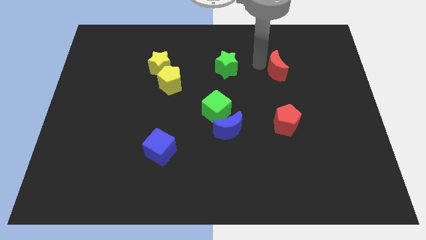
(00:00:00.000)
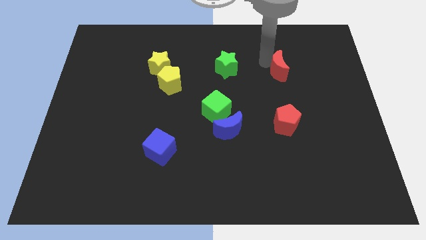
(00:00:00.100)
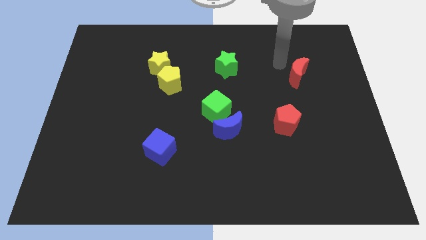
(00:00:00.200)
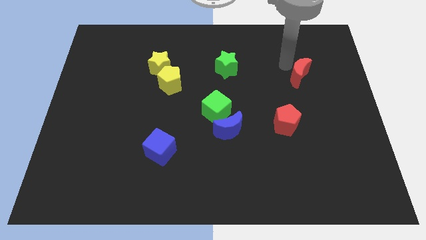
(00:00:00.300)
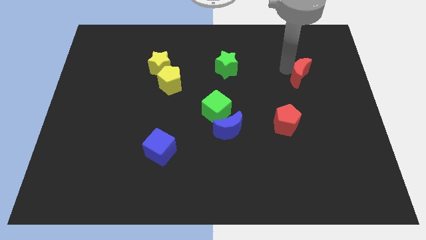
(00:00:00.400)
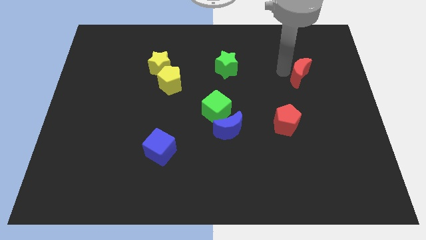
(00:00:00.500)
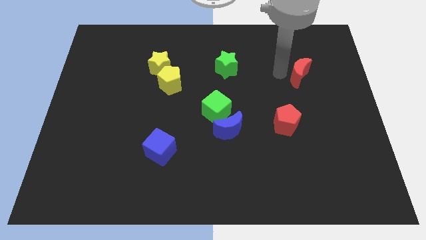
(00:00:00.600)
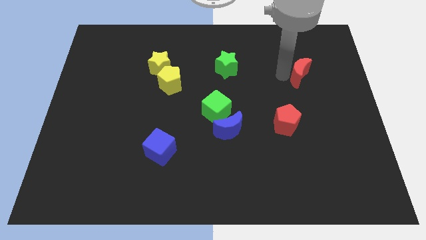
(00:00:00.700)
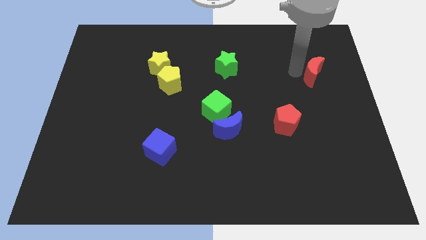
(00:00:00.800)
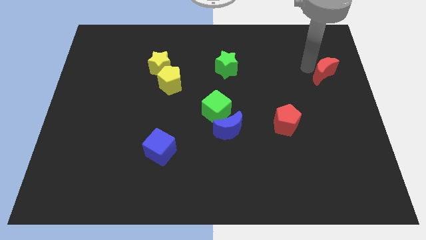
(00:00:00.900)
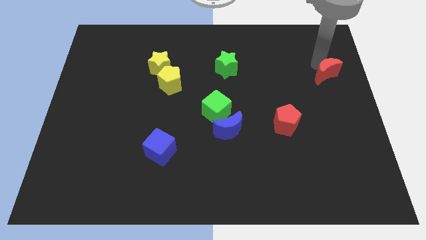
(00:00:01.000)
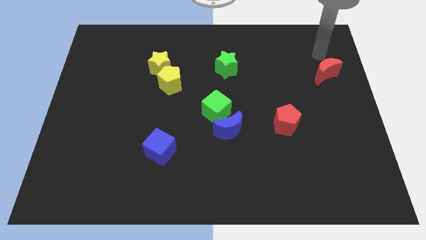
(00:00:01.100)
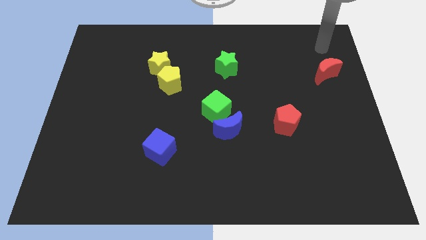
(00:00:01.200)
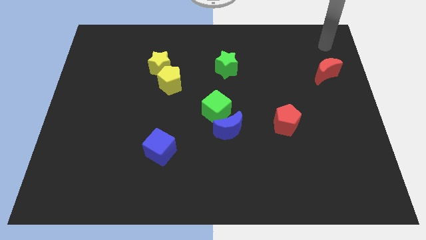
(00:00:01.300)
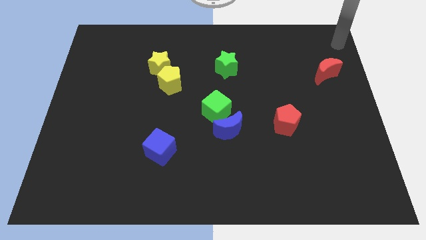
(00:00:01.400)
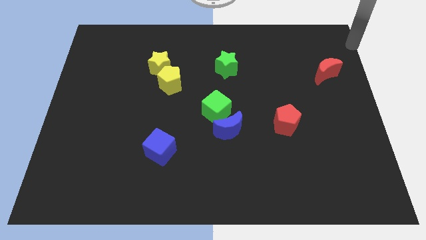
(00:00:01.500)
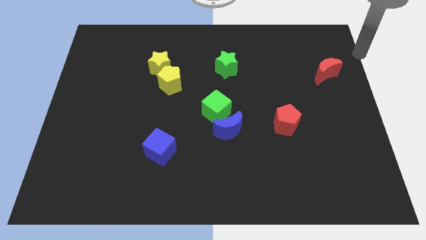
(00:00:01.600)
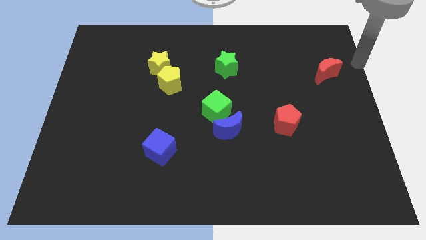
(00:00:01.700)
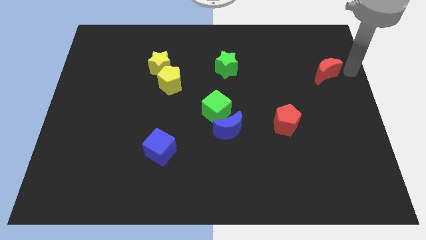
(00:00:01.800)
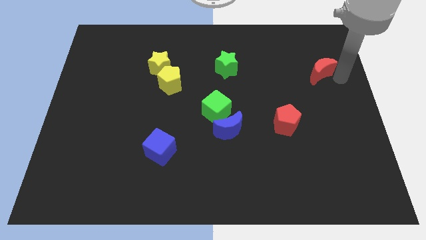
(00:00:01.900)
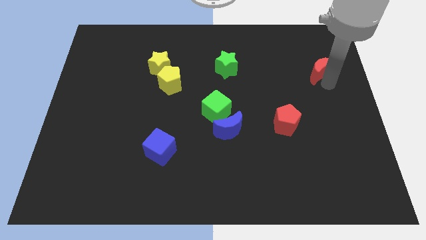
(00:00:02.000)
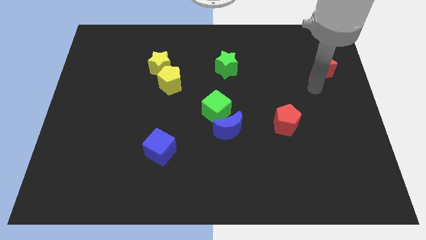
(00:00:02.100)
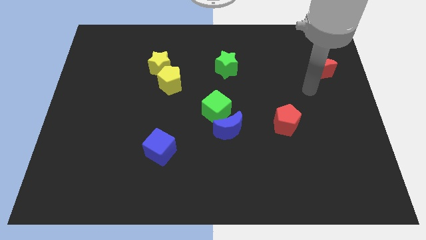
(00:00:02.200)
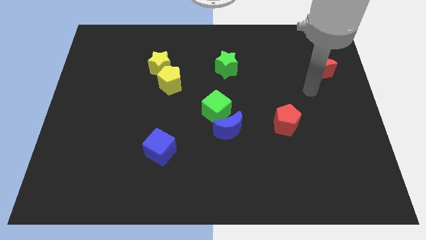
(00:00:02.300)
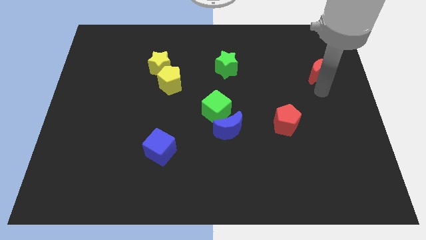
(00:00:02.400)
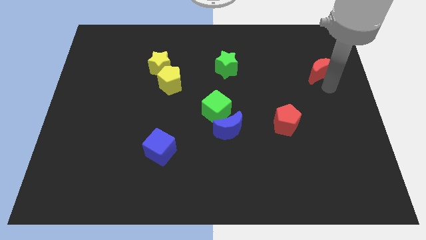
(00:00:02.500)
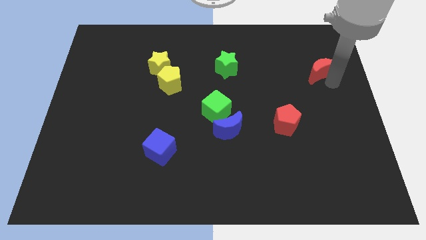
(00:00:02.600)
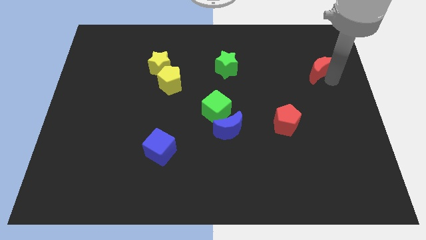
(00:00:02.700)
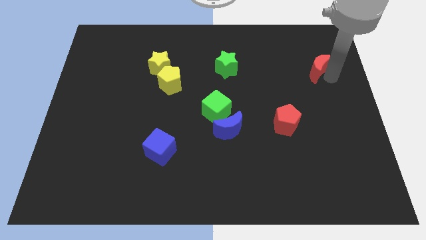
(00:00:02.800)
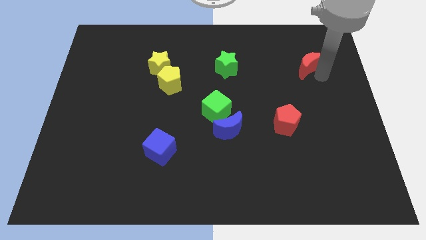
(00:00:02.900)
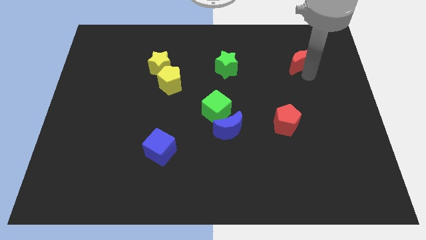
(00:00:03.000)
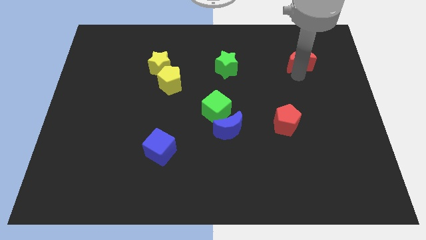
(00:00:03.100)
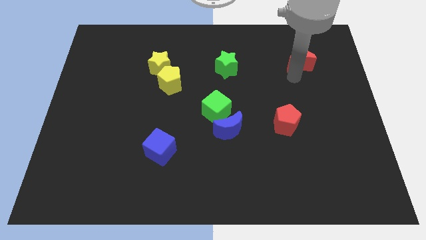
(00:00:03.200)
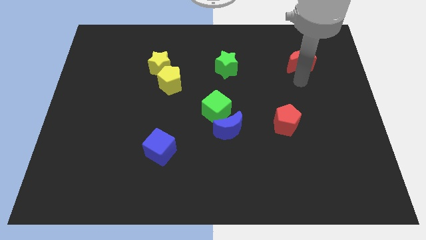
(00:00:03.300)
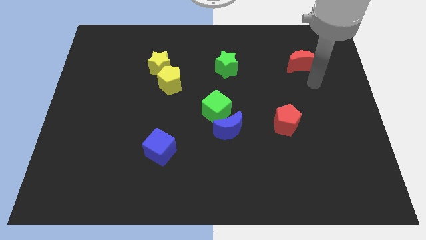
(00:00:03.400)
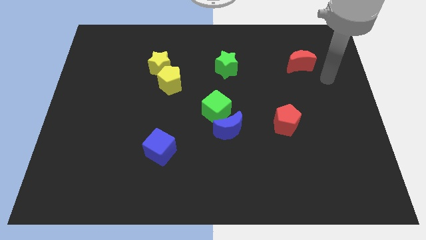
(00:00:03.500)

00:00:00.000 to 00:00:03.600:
move the red crescent to the top right of board

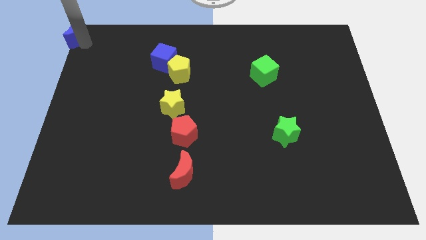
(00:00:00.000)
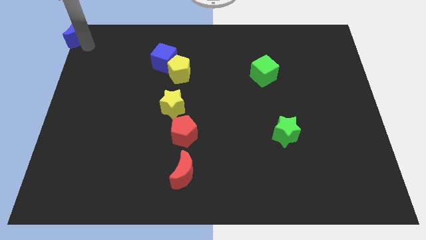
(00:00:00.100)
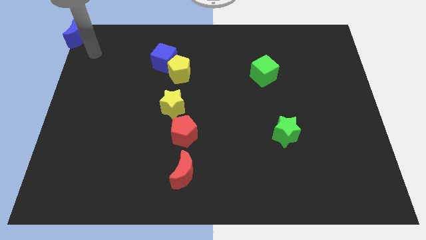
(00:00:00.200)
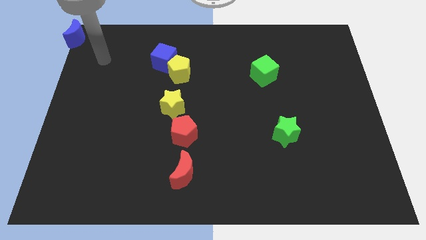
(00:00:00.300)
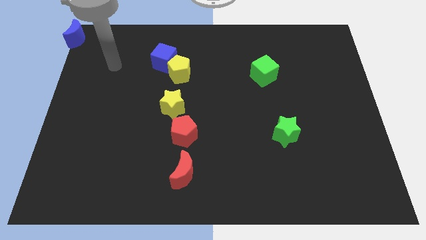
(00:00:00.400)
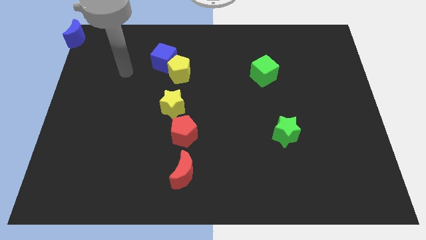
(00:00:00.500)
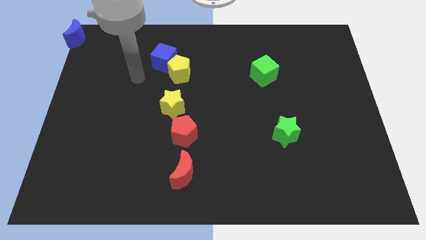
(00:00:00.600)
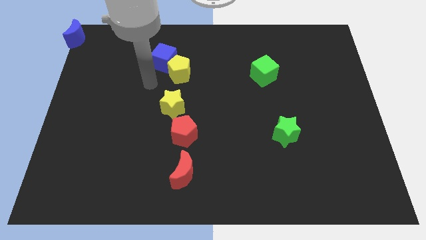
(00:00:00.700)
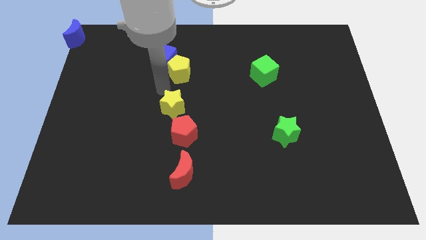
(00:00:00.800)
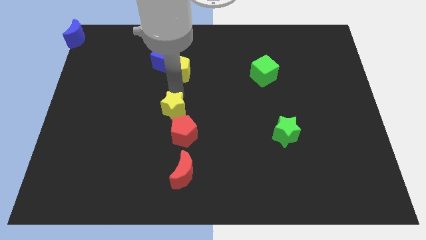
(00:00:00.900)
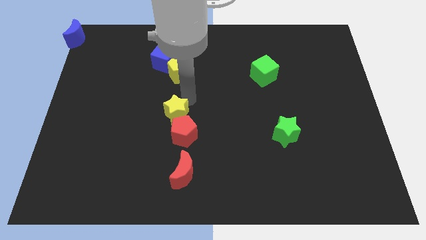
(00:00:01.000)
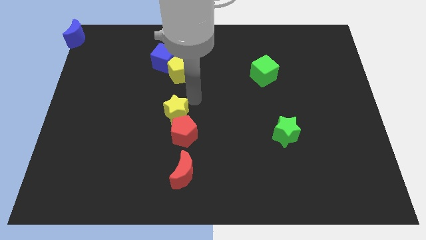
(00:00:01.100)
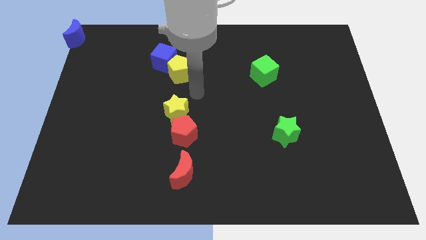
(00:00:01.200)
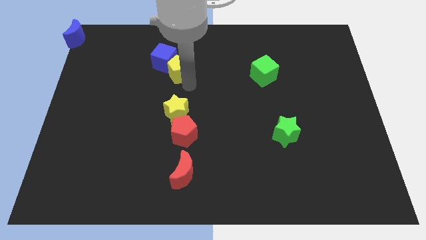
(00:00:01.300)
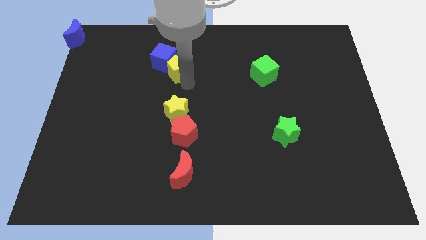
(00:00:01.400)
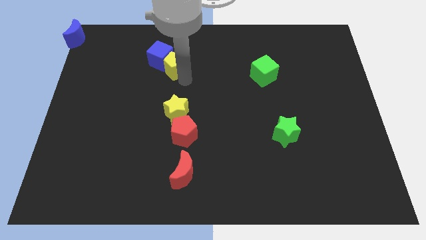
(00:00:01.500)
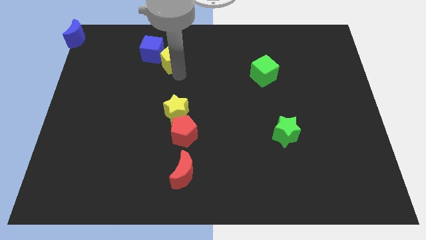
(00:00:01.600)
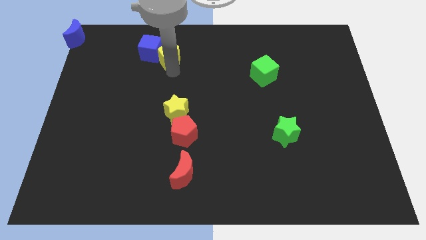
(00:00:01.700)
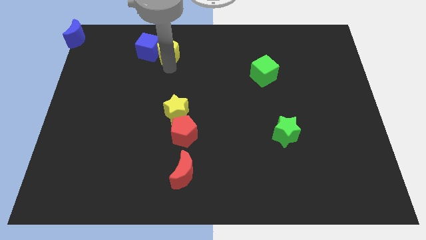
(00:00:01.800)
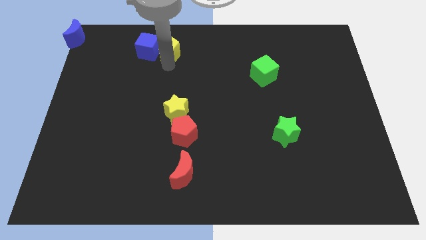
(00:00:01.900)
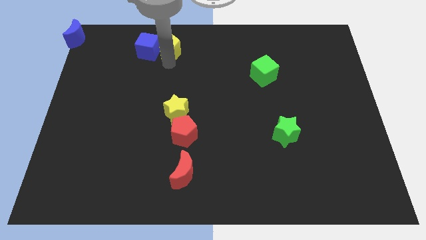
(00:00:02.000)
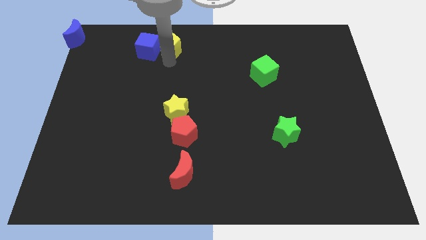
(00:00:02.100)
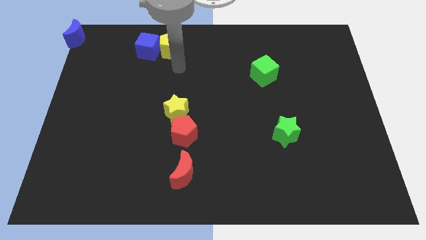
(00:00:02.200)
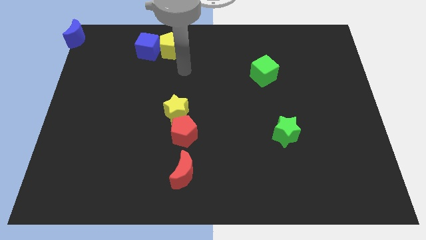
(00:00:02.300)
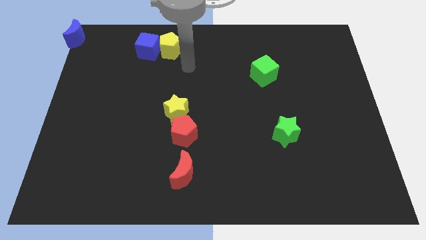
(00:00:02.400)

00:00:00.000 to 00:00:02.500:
push the yellow pentagon blue cube and yellow star in different directions

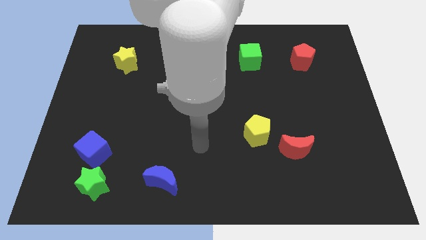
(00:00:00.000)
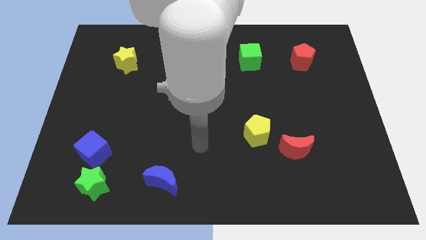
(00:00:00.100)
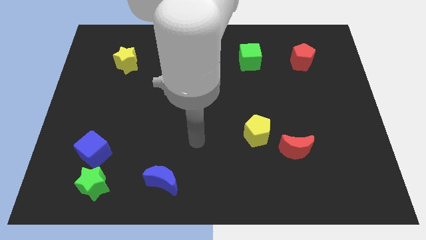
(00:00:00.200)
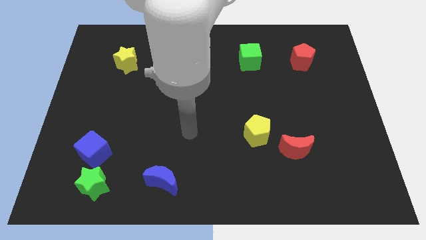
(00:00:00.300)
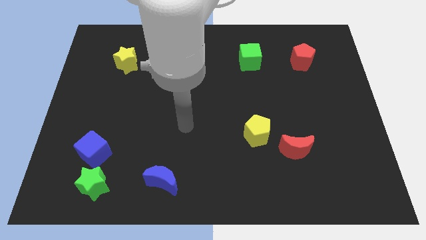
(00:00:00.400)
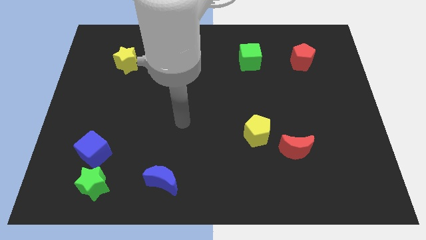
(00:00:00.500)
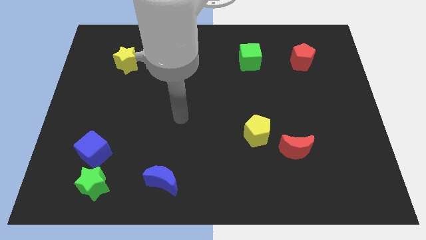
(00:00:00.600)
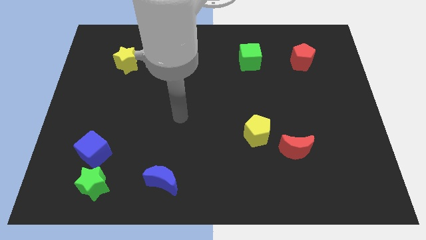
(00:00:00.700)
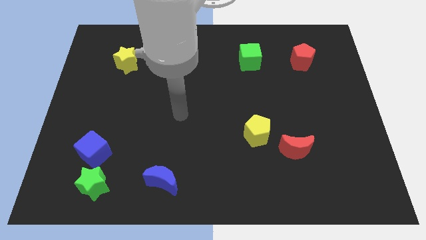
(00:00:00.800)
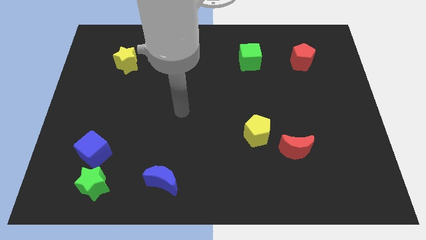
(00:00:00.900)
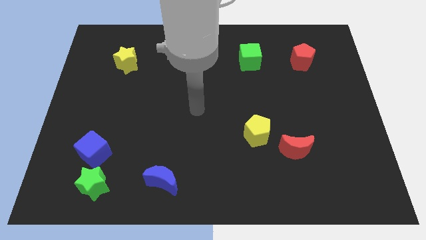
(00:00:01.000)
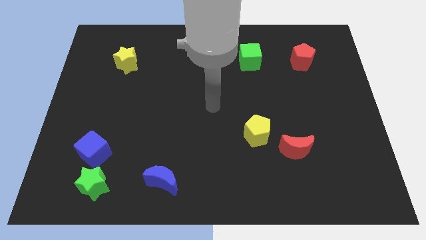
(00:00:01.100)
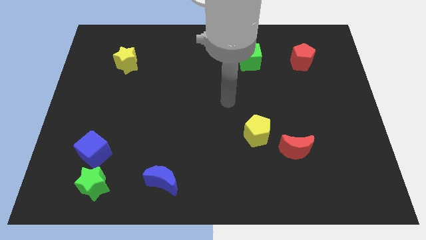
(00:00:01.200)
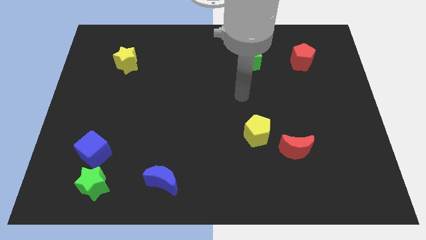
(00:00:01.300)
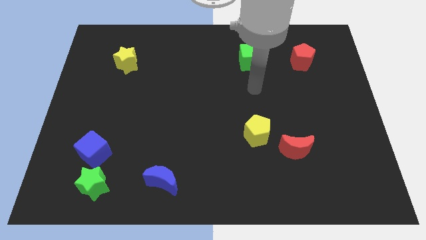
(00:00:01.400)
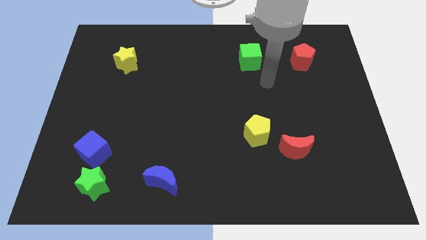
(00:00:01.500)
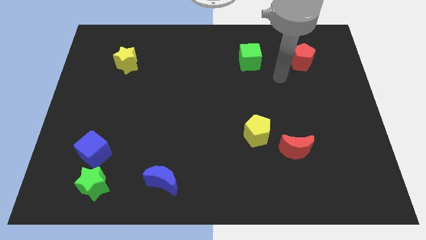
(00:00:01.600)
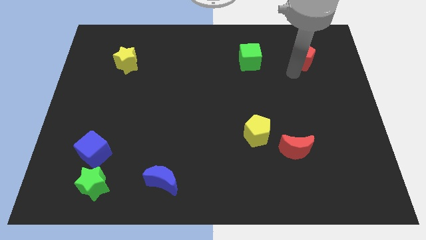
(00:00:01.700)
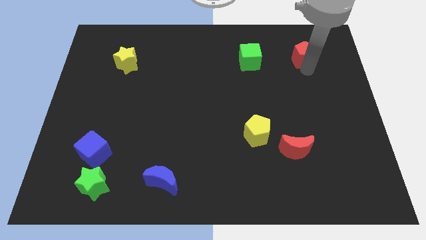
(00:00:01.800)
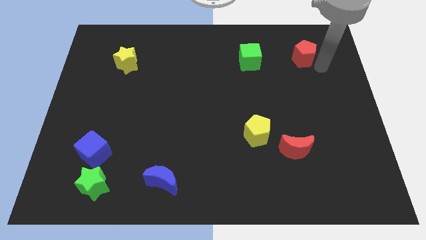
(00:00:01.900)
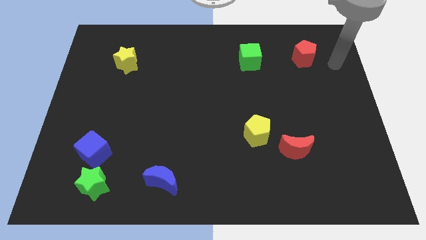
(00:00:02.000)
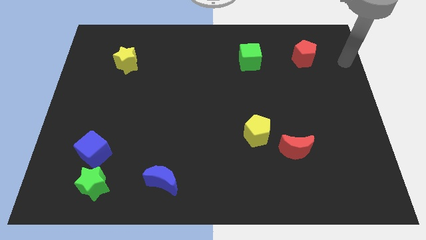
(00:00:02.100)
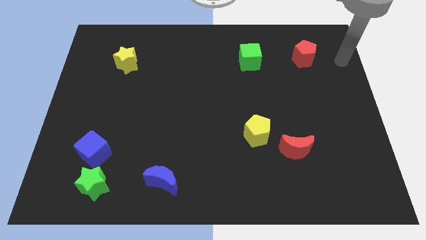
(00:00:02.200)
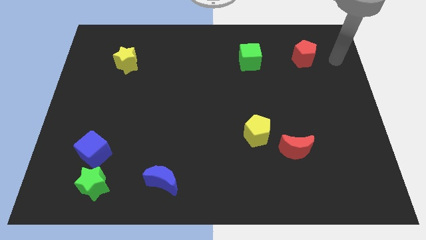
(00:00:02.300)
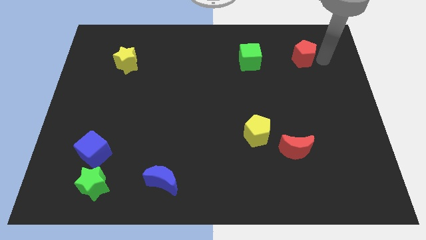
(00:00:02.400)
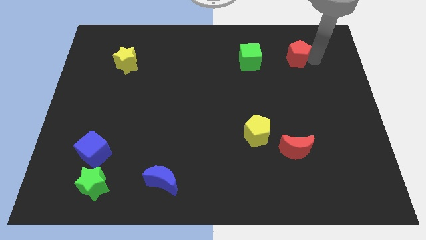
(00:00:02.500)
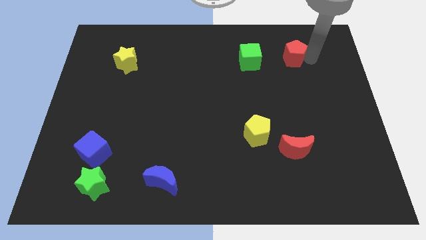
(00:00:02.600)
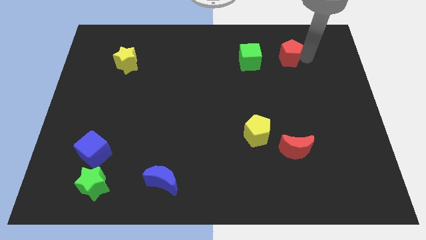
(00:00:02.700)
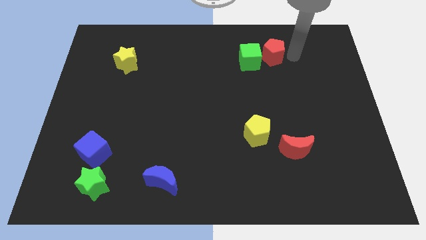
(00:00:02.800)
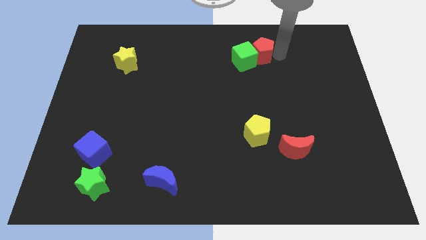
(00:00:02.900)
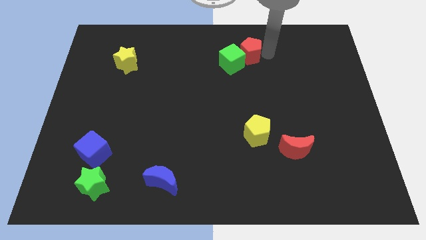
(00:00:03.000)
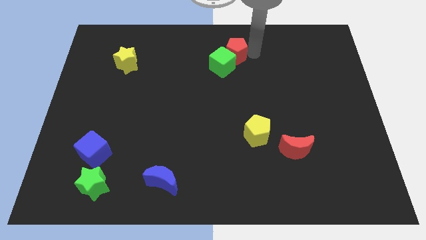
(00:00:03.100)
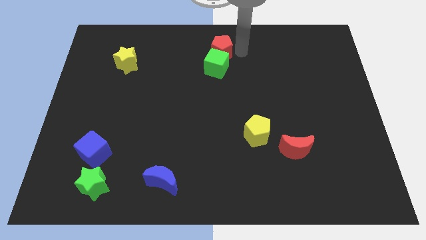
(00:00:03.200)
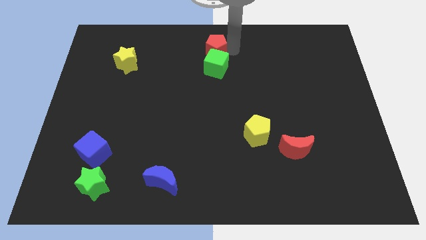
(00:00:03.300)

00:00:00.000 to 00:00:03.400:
move the red pentagon to the top side of the green cube
